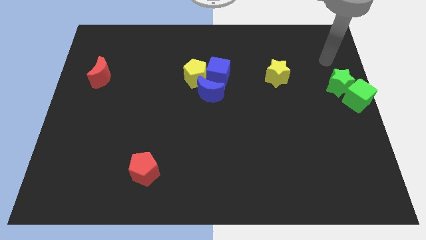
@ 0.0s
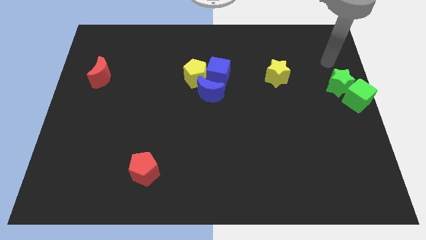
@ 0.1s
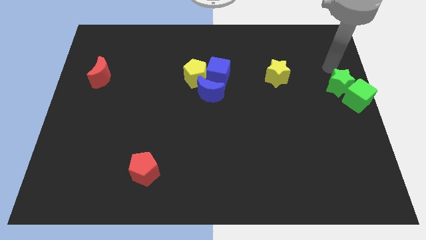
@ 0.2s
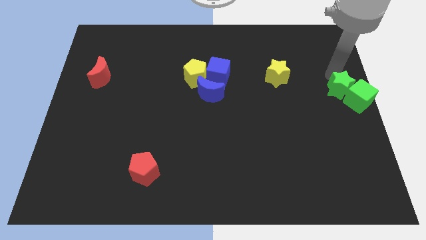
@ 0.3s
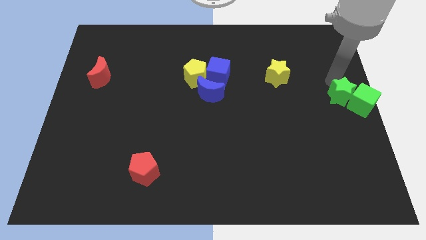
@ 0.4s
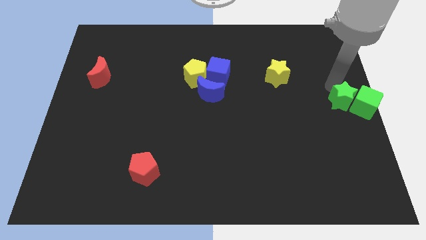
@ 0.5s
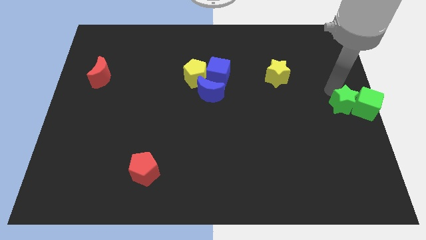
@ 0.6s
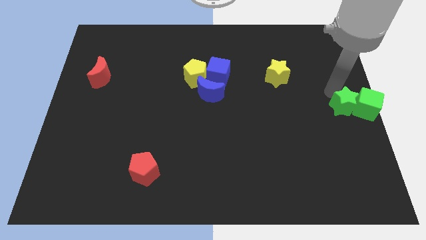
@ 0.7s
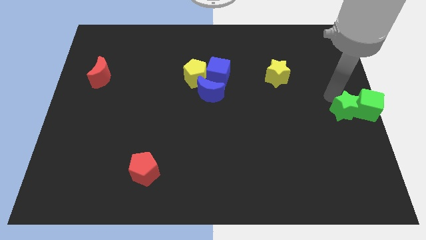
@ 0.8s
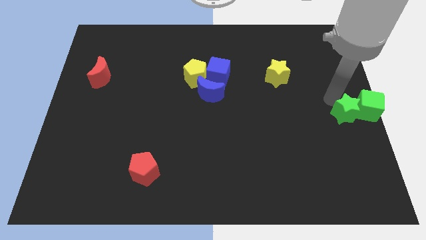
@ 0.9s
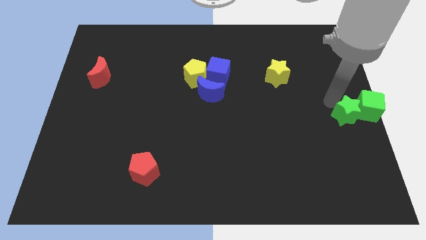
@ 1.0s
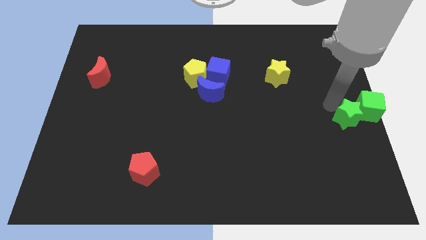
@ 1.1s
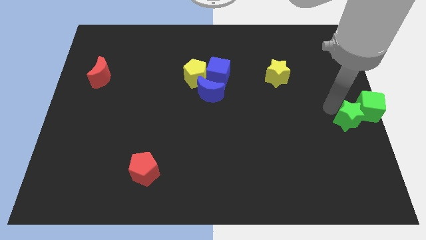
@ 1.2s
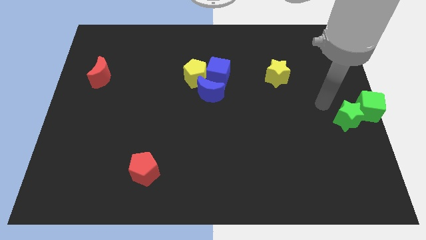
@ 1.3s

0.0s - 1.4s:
place the green cube and green star at the center right of the board

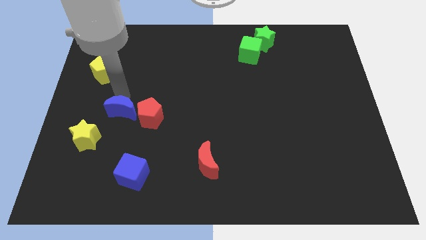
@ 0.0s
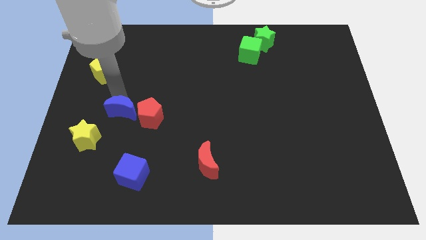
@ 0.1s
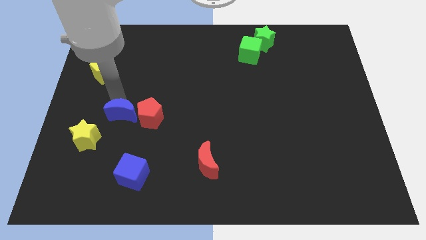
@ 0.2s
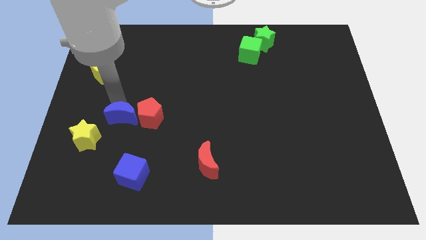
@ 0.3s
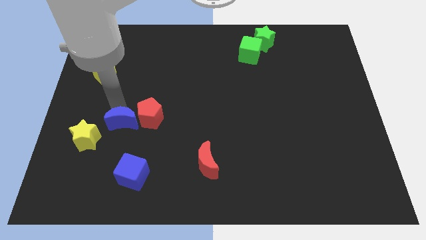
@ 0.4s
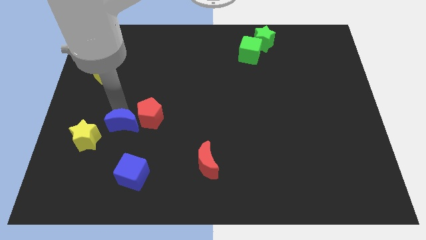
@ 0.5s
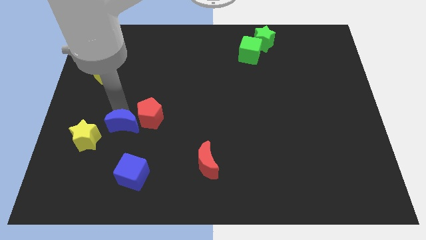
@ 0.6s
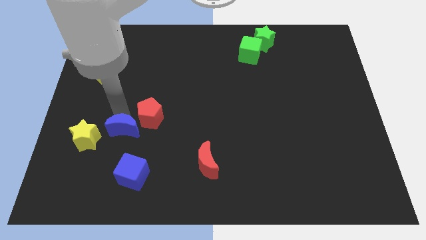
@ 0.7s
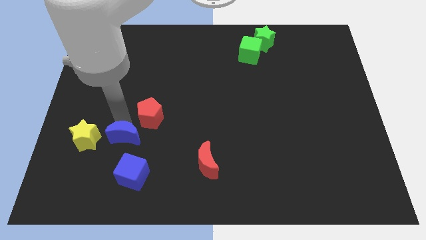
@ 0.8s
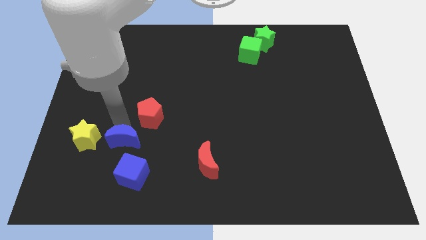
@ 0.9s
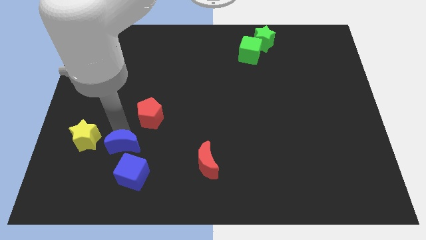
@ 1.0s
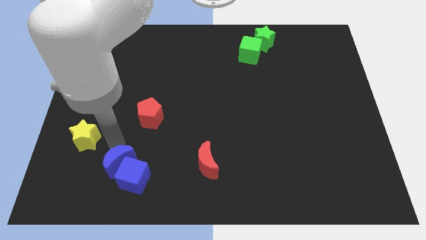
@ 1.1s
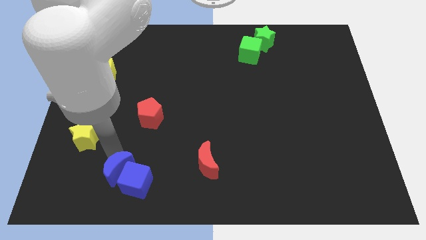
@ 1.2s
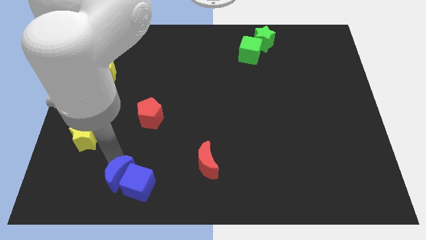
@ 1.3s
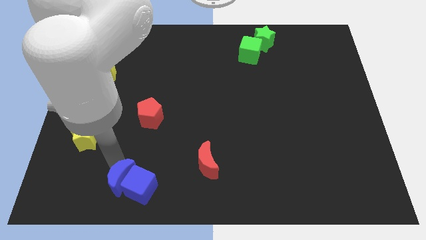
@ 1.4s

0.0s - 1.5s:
push the blue crescent to the left of the blue cube

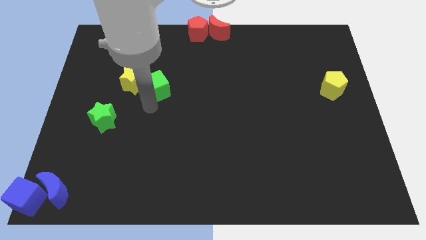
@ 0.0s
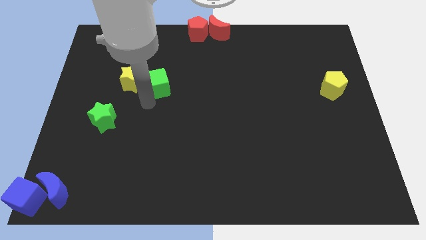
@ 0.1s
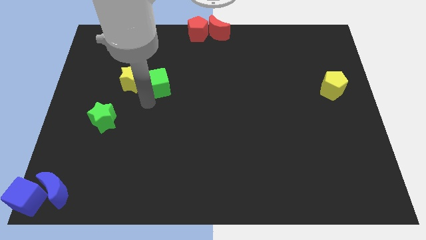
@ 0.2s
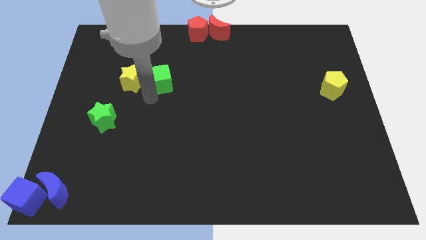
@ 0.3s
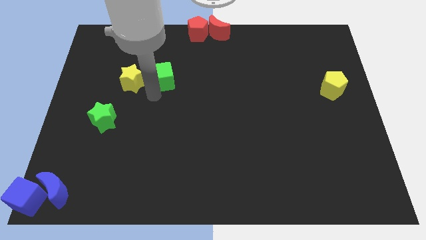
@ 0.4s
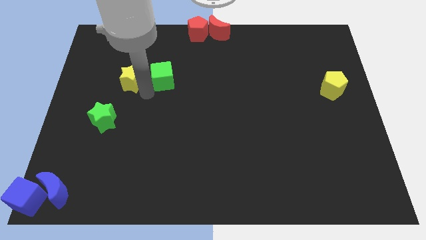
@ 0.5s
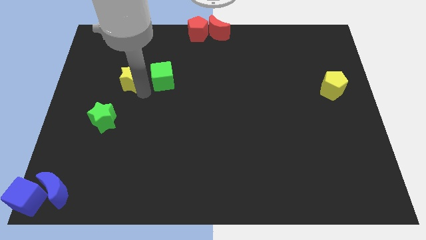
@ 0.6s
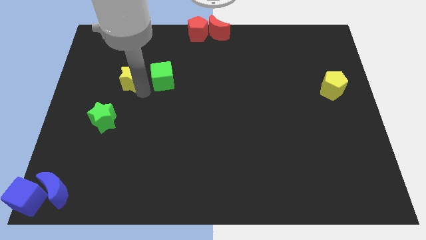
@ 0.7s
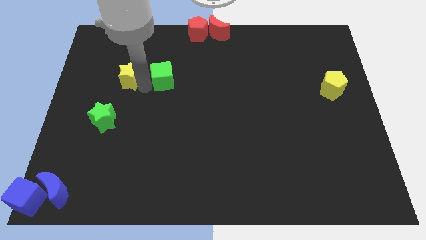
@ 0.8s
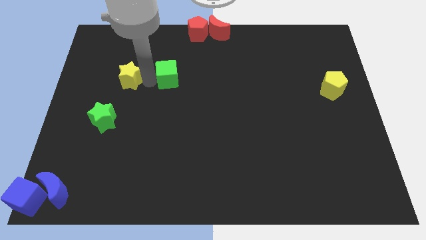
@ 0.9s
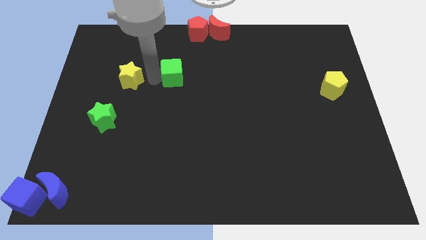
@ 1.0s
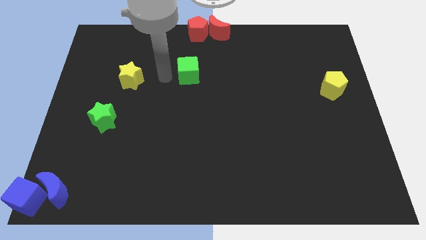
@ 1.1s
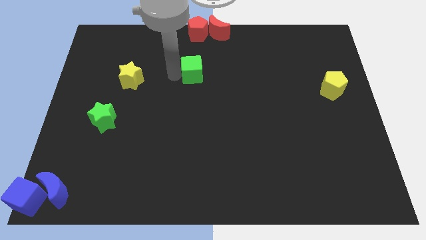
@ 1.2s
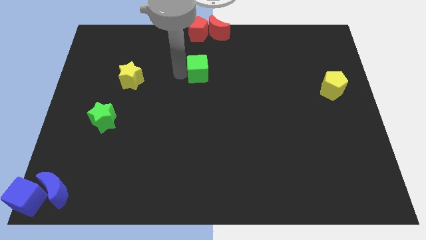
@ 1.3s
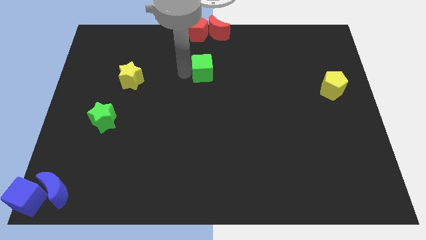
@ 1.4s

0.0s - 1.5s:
separate green cube from the yellow star

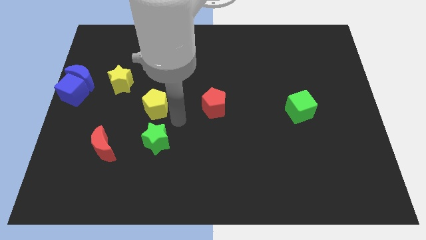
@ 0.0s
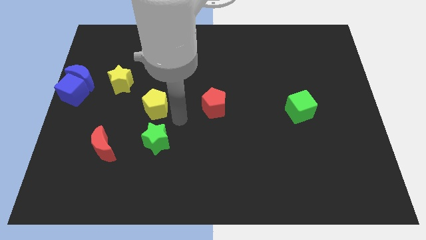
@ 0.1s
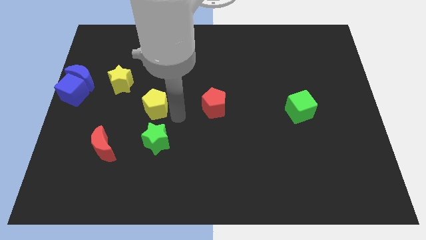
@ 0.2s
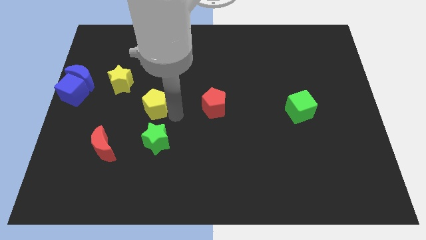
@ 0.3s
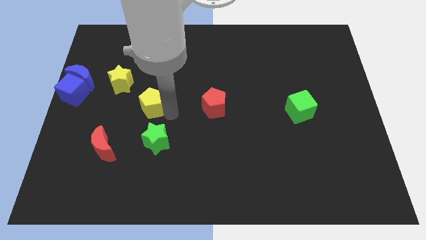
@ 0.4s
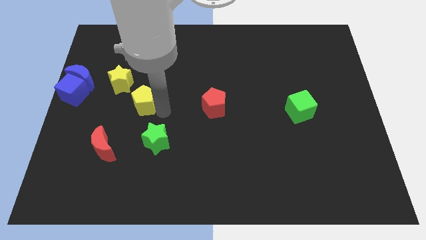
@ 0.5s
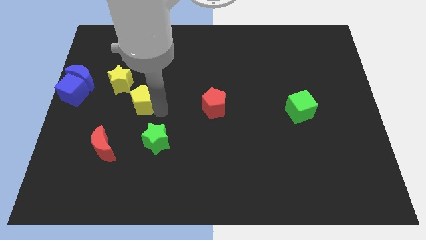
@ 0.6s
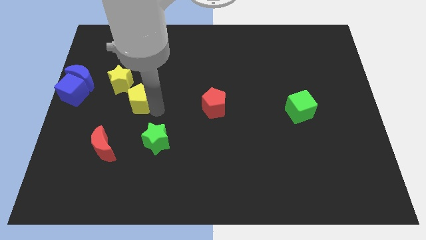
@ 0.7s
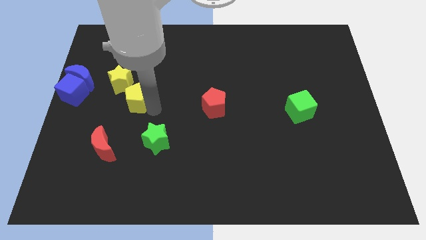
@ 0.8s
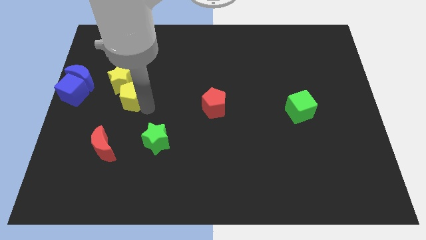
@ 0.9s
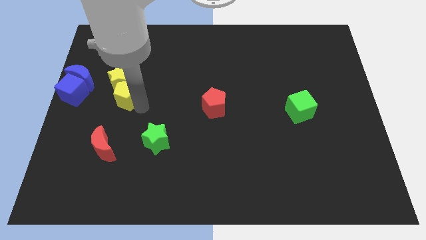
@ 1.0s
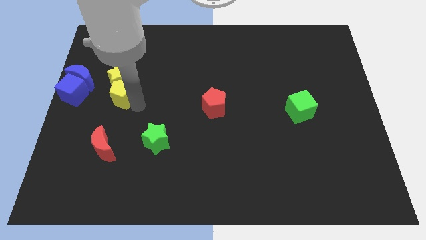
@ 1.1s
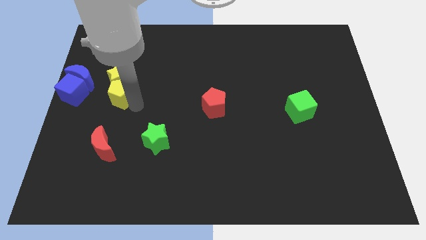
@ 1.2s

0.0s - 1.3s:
place the yellow pentagon below the yellow star

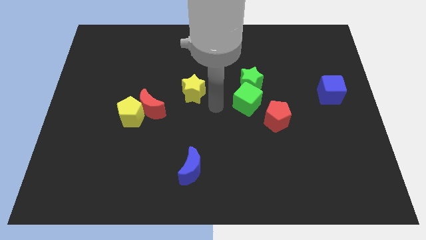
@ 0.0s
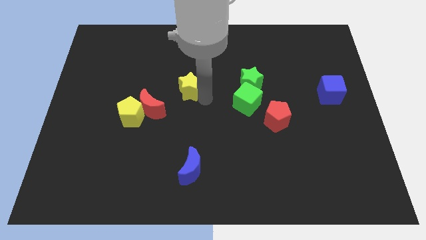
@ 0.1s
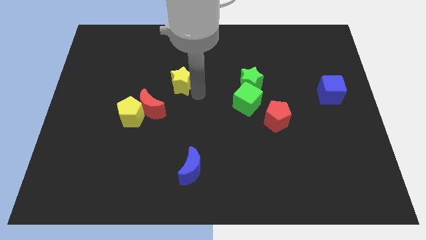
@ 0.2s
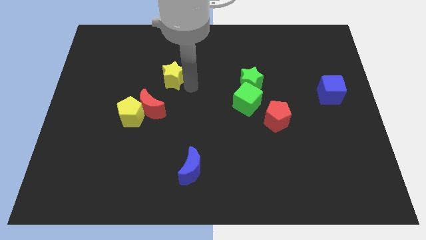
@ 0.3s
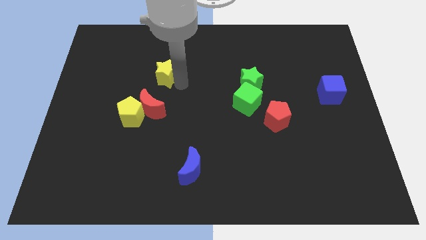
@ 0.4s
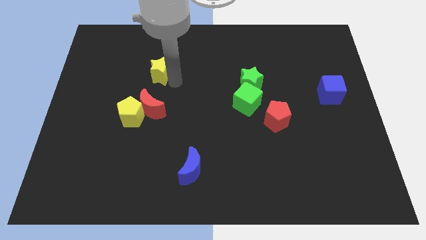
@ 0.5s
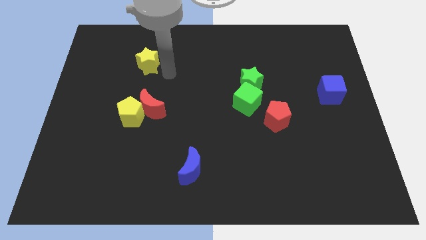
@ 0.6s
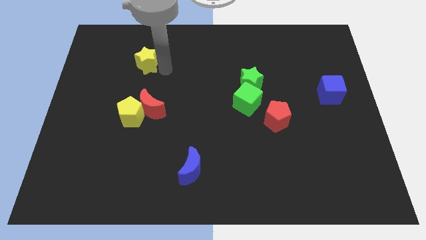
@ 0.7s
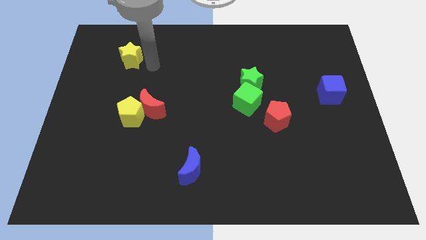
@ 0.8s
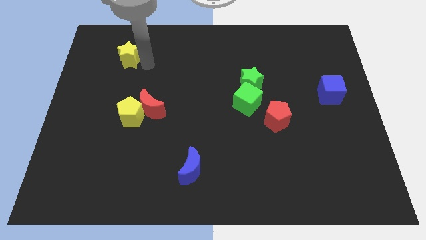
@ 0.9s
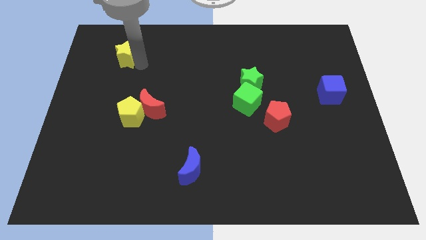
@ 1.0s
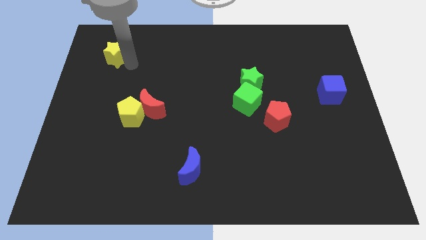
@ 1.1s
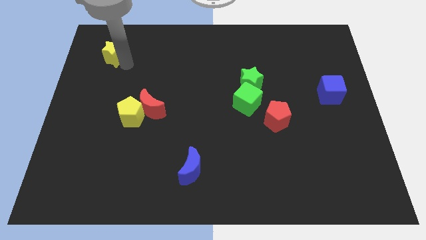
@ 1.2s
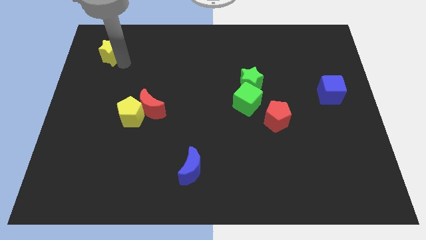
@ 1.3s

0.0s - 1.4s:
move the yellow star away from the green cube

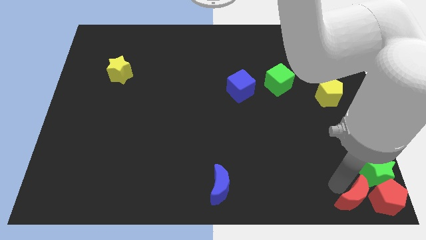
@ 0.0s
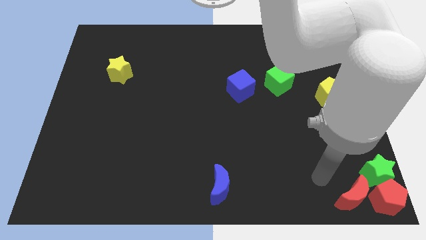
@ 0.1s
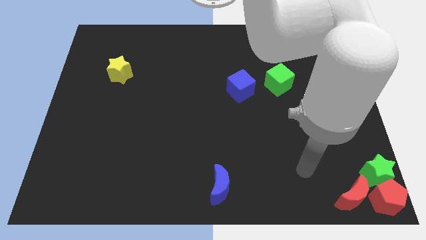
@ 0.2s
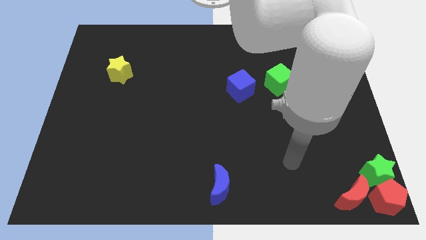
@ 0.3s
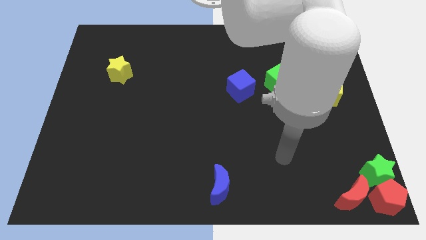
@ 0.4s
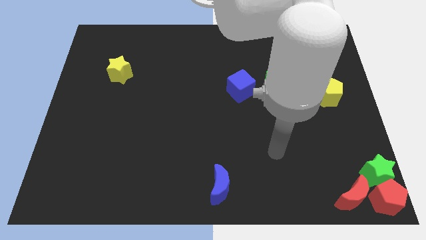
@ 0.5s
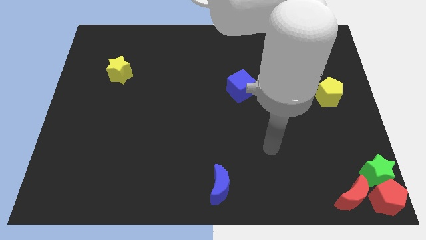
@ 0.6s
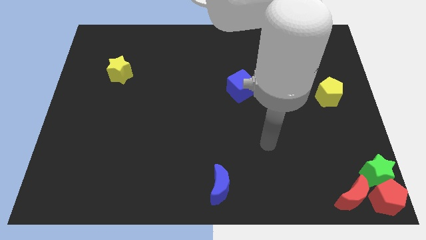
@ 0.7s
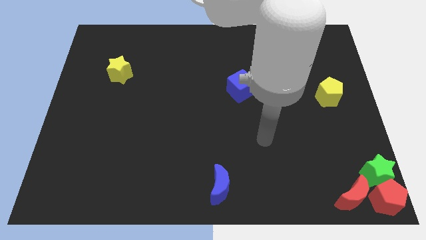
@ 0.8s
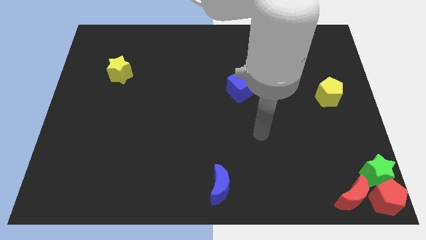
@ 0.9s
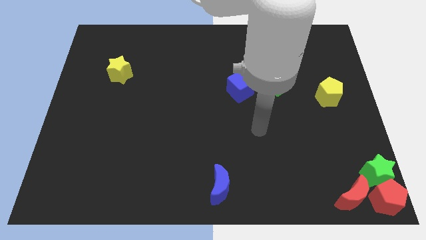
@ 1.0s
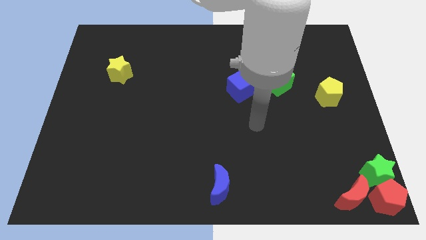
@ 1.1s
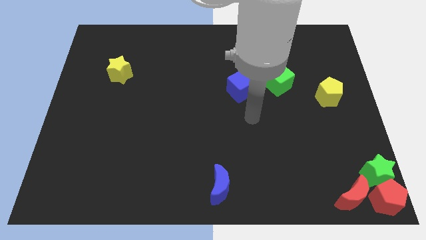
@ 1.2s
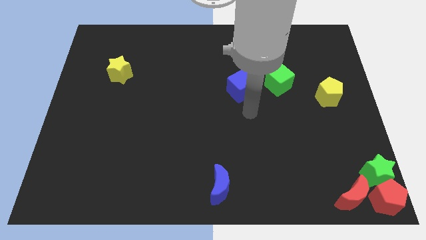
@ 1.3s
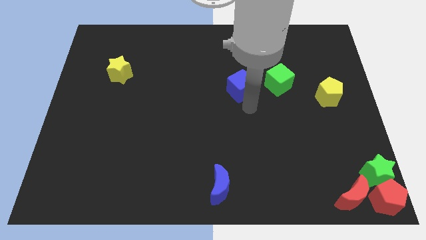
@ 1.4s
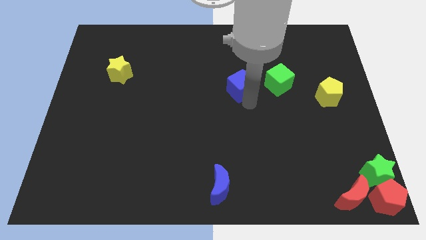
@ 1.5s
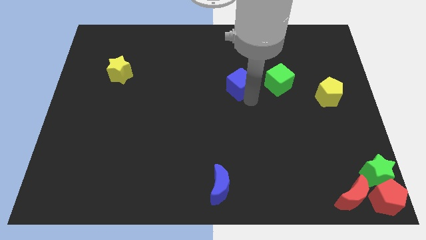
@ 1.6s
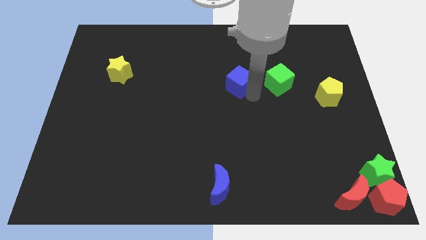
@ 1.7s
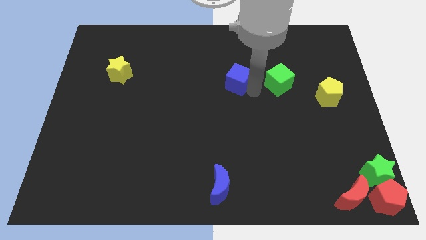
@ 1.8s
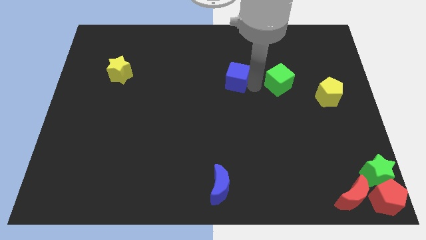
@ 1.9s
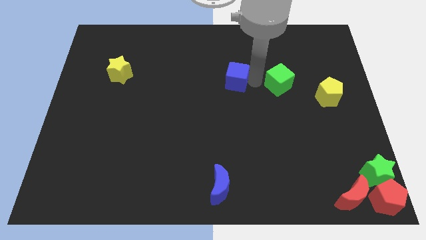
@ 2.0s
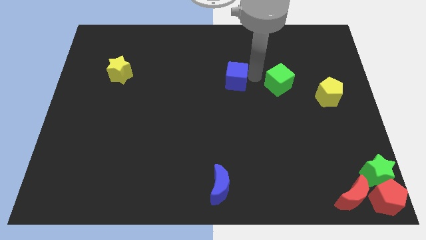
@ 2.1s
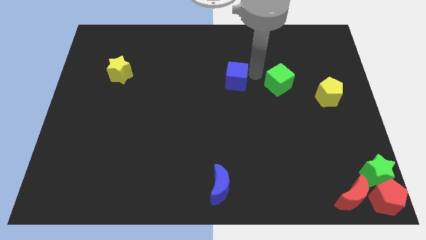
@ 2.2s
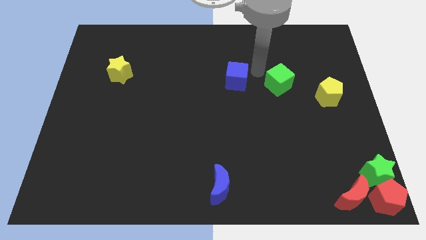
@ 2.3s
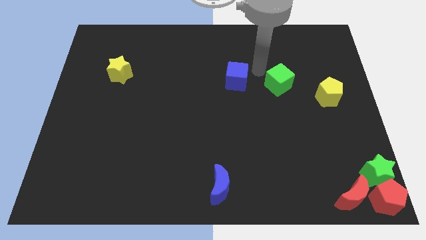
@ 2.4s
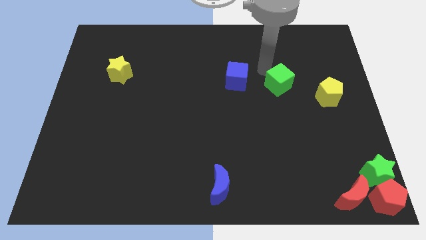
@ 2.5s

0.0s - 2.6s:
slightly push the blue cube to the top center of the board
